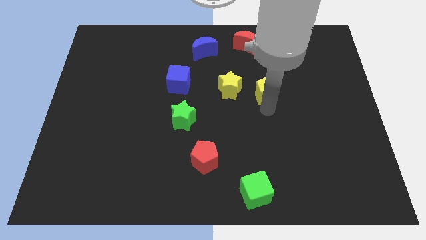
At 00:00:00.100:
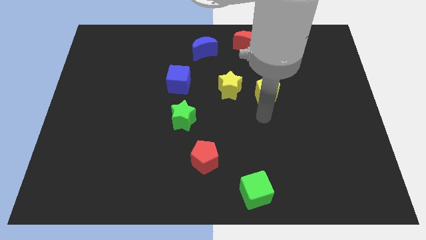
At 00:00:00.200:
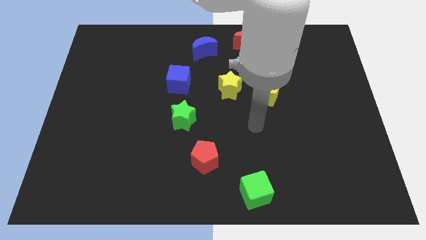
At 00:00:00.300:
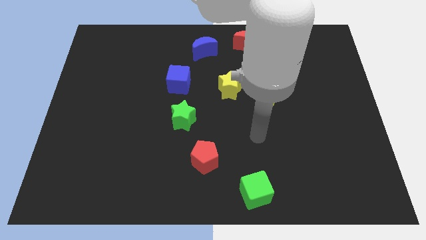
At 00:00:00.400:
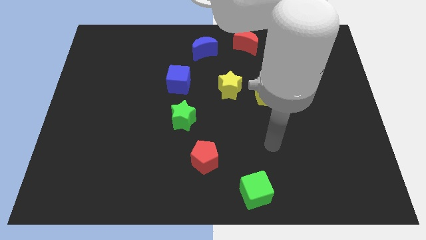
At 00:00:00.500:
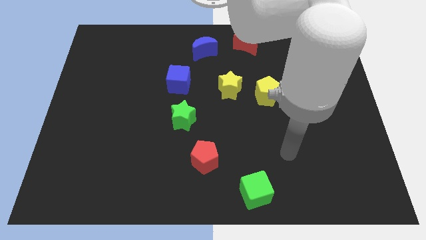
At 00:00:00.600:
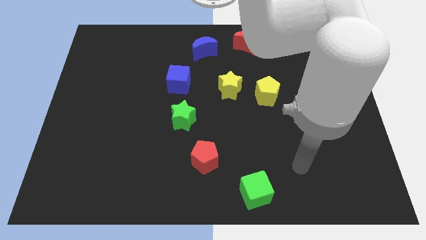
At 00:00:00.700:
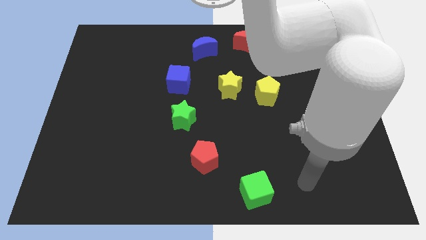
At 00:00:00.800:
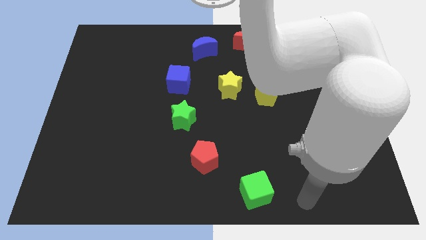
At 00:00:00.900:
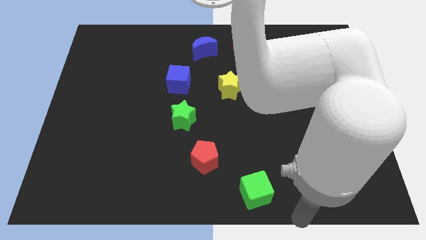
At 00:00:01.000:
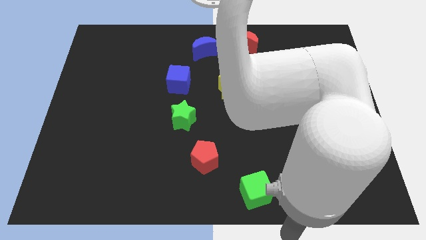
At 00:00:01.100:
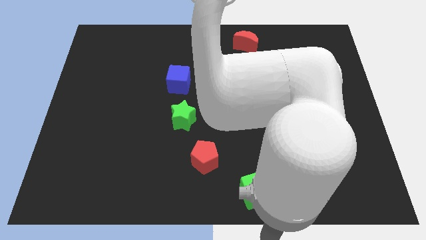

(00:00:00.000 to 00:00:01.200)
move your arm towards the bottom side of the board

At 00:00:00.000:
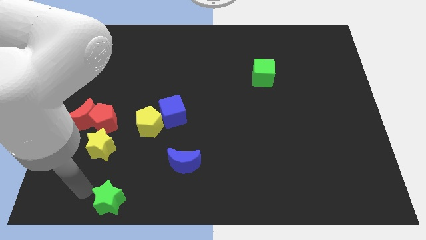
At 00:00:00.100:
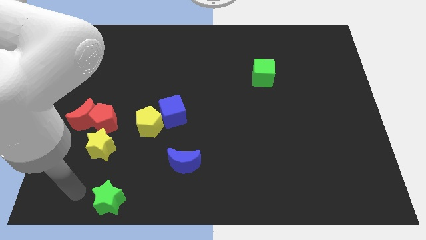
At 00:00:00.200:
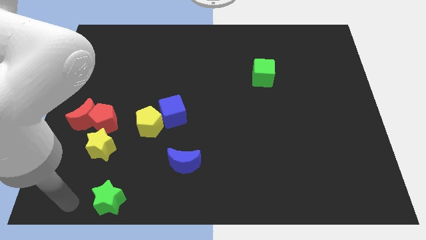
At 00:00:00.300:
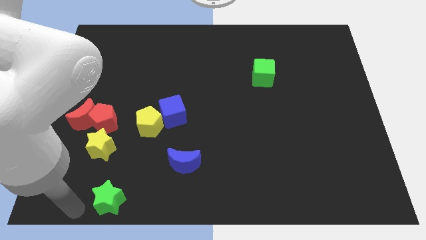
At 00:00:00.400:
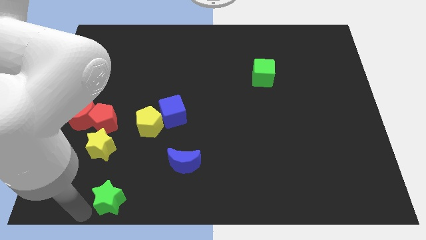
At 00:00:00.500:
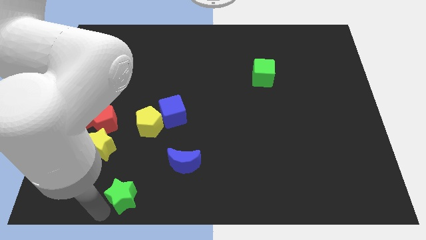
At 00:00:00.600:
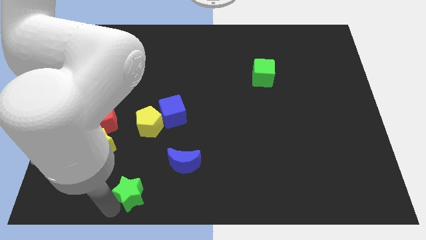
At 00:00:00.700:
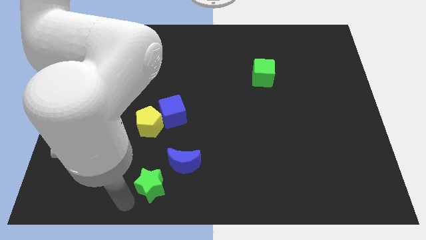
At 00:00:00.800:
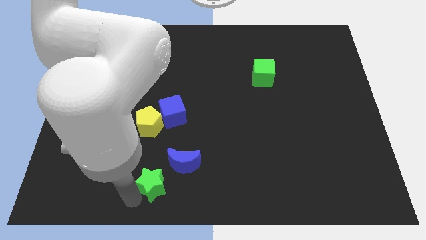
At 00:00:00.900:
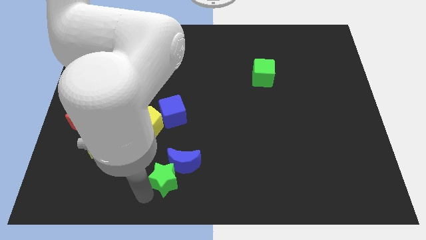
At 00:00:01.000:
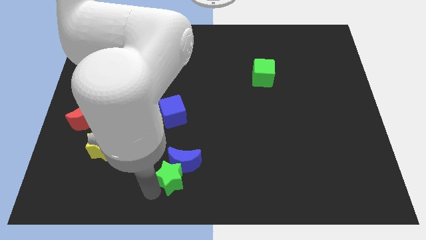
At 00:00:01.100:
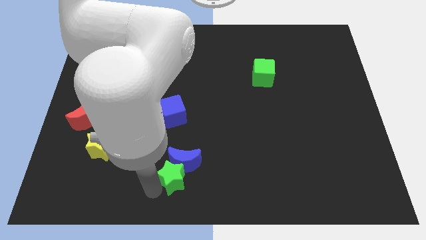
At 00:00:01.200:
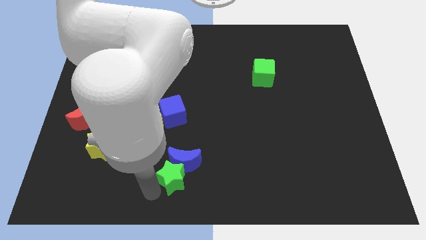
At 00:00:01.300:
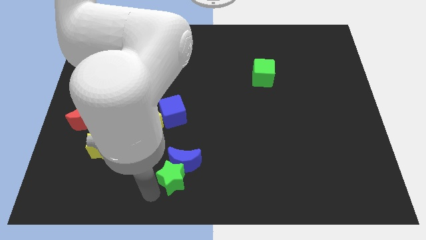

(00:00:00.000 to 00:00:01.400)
push the green star into the blue moon

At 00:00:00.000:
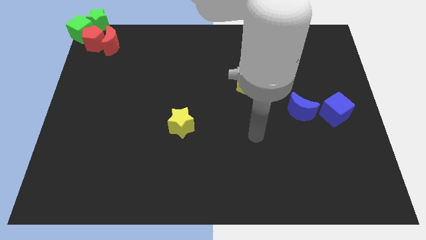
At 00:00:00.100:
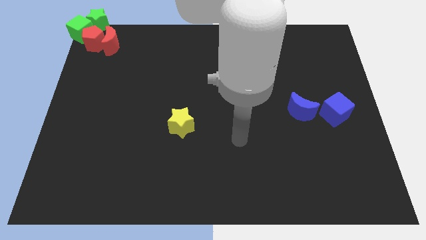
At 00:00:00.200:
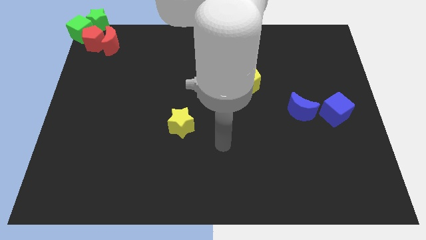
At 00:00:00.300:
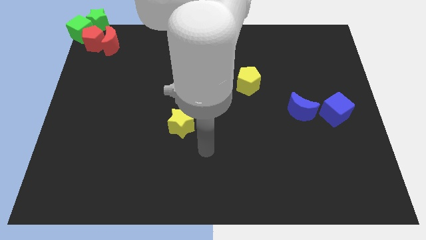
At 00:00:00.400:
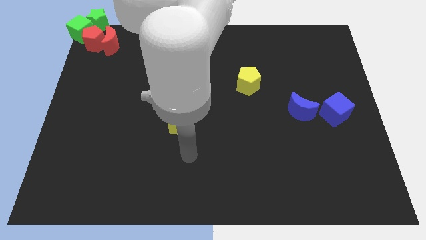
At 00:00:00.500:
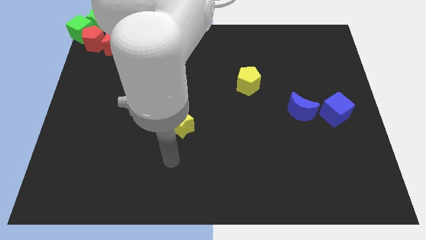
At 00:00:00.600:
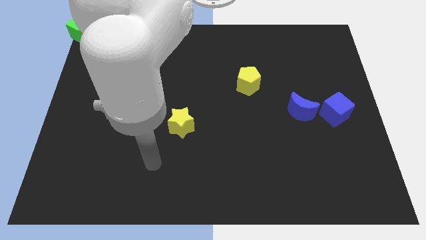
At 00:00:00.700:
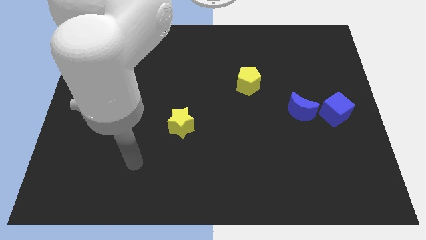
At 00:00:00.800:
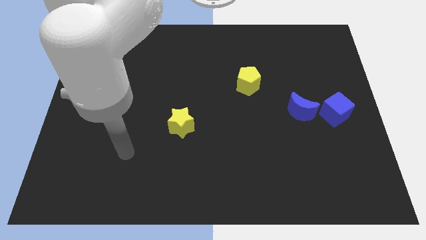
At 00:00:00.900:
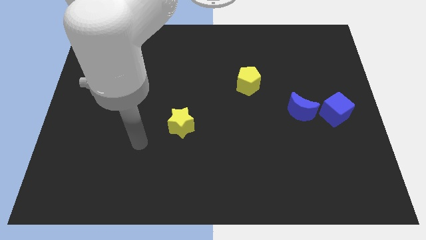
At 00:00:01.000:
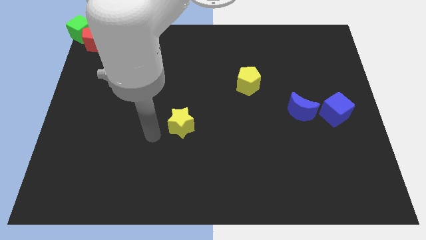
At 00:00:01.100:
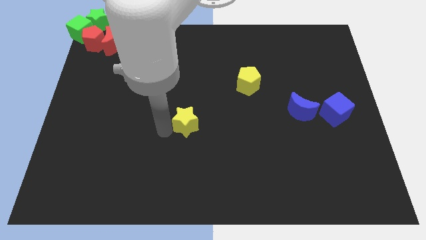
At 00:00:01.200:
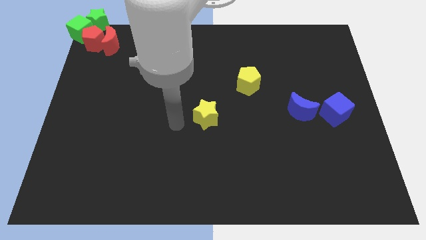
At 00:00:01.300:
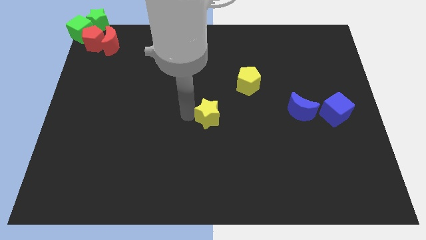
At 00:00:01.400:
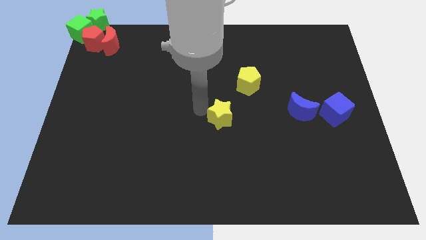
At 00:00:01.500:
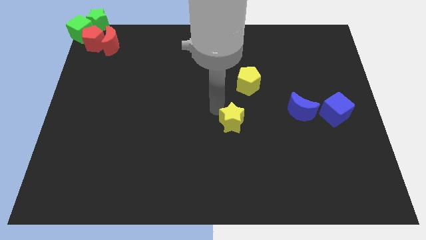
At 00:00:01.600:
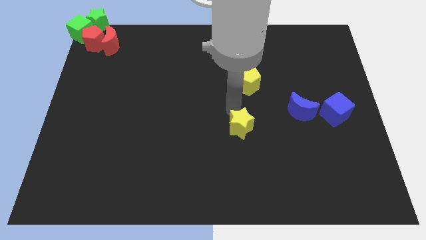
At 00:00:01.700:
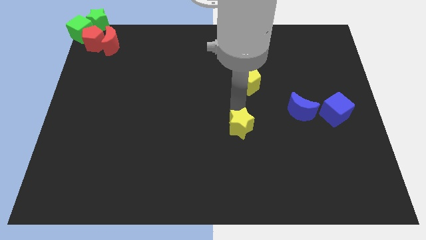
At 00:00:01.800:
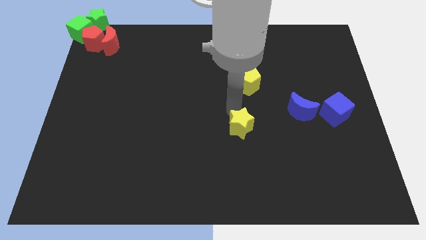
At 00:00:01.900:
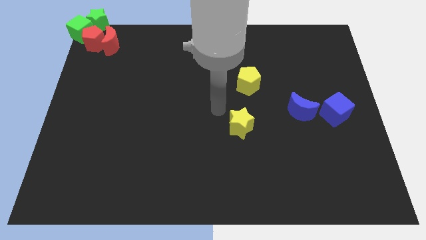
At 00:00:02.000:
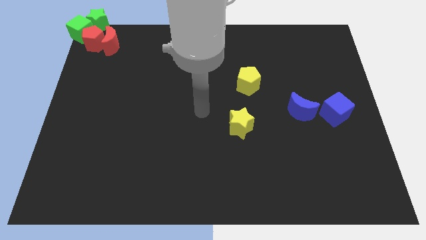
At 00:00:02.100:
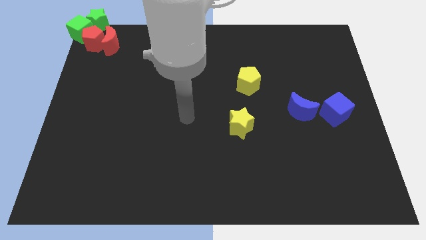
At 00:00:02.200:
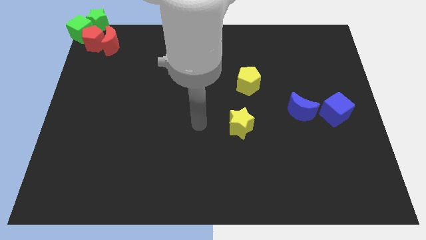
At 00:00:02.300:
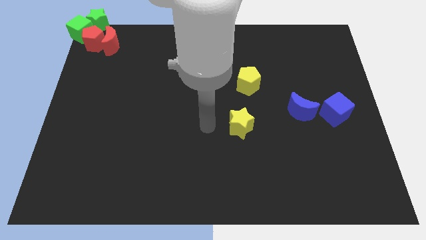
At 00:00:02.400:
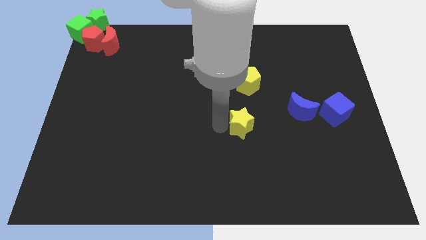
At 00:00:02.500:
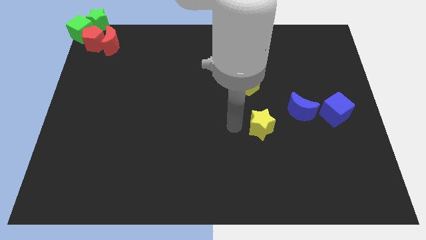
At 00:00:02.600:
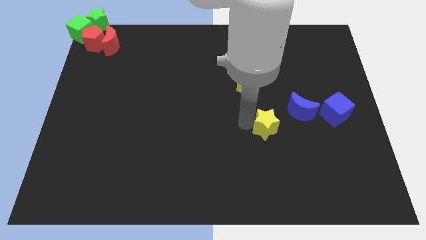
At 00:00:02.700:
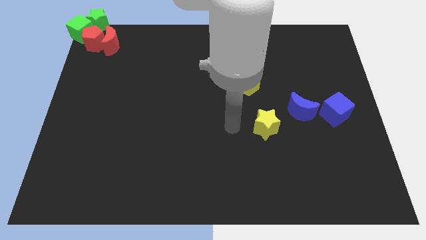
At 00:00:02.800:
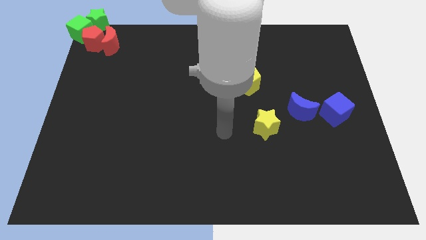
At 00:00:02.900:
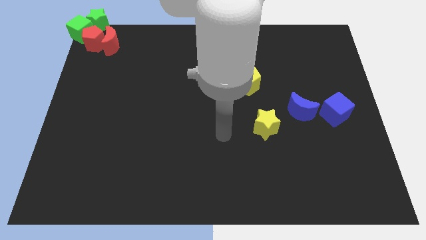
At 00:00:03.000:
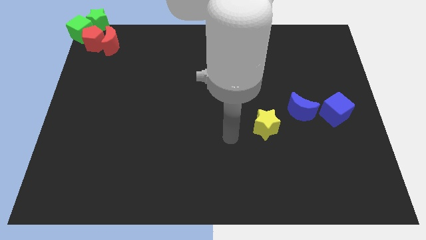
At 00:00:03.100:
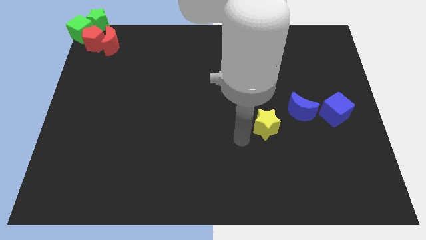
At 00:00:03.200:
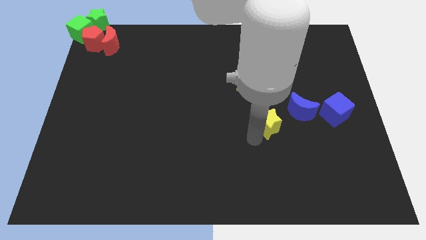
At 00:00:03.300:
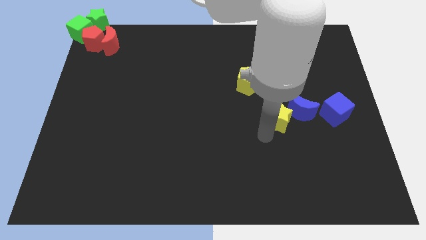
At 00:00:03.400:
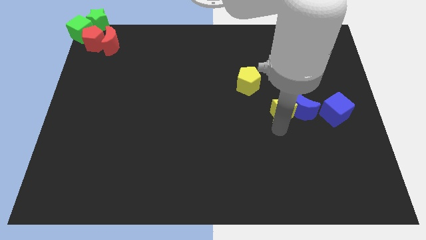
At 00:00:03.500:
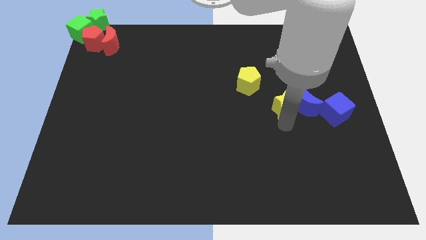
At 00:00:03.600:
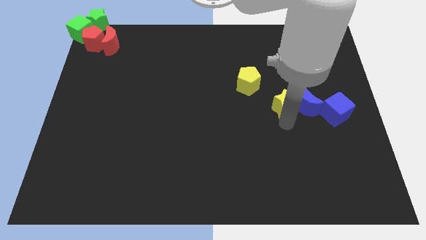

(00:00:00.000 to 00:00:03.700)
push the yellow star into the blue moon

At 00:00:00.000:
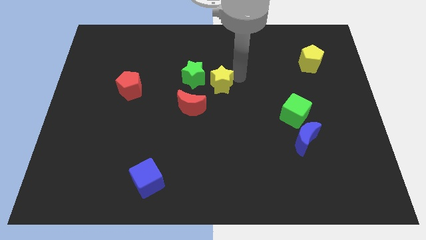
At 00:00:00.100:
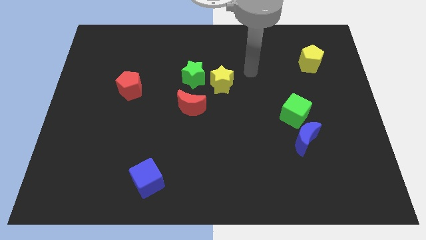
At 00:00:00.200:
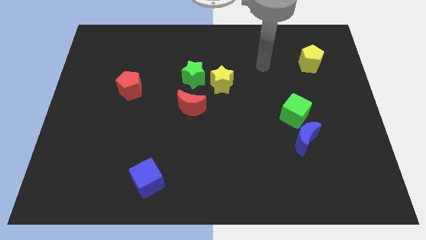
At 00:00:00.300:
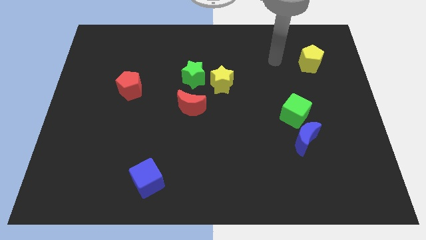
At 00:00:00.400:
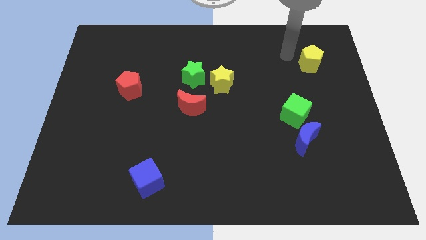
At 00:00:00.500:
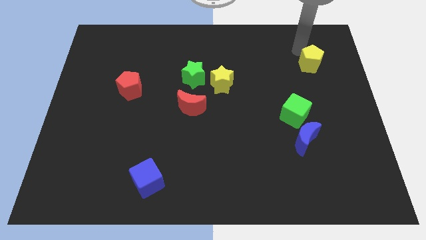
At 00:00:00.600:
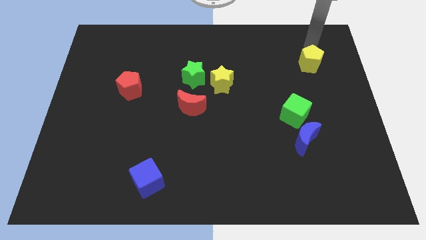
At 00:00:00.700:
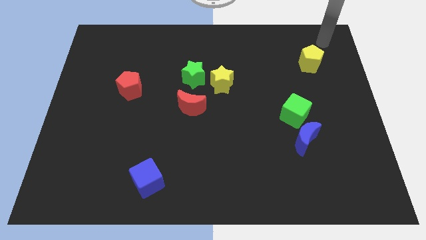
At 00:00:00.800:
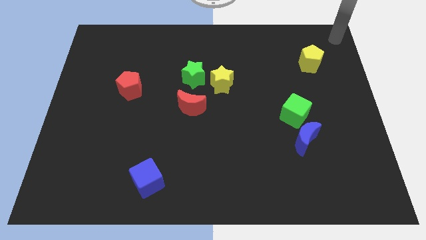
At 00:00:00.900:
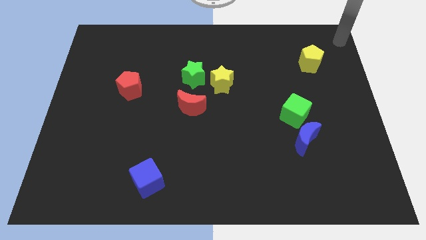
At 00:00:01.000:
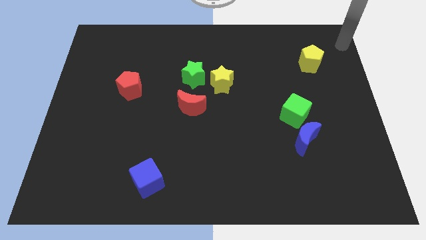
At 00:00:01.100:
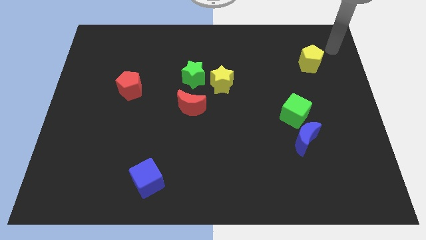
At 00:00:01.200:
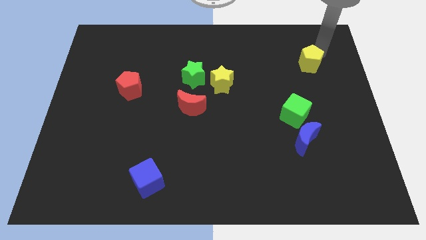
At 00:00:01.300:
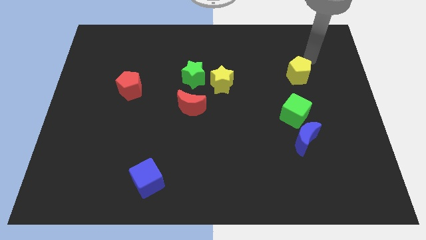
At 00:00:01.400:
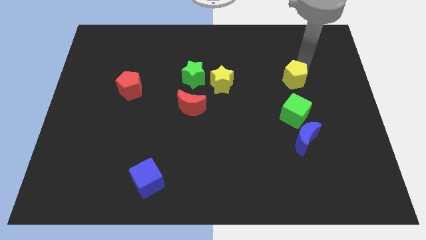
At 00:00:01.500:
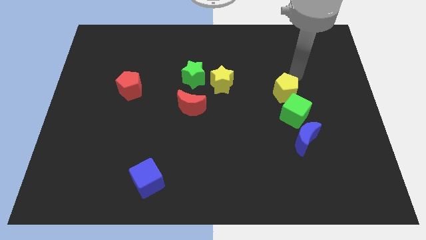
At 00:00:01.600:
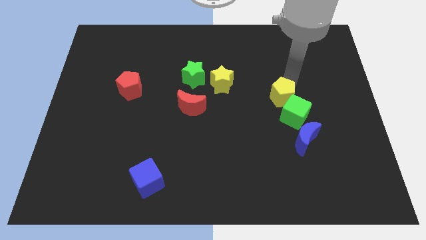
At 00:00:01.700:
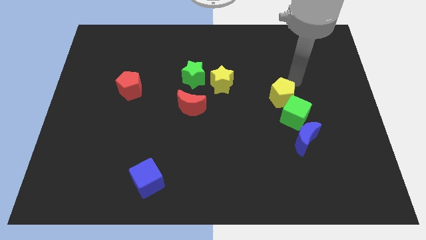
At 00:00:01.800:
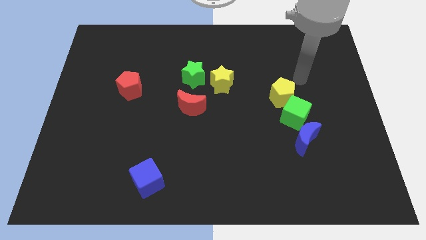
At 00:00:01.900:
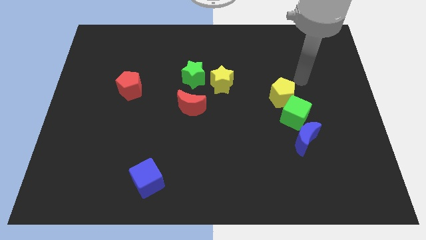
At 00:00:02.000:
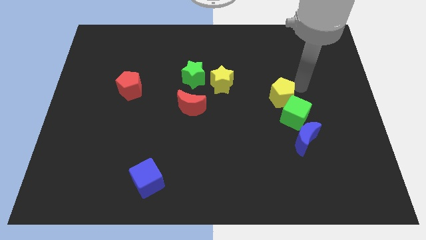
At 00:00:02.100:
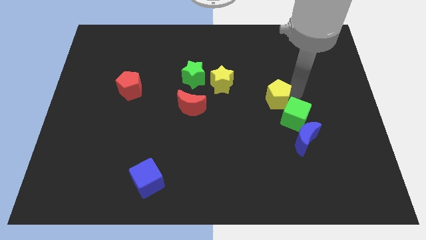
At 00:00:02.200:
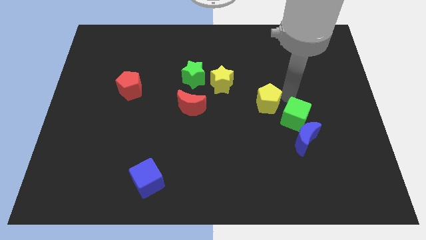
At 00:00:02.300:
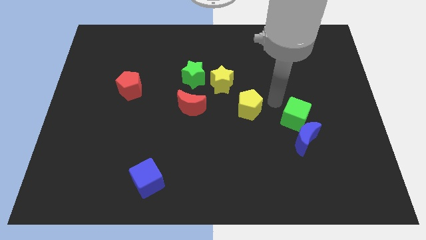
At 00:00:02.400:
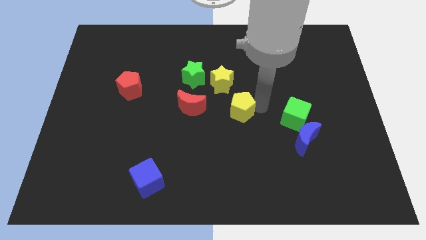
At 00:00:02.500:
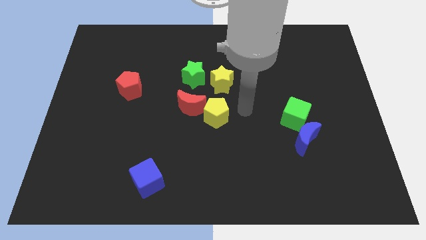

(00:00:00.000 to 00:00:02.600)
push the yellow pentagon right to the red crescent
